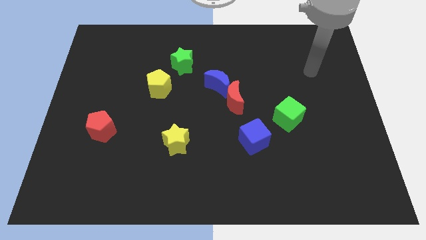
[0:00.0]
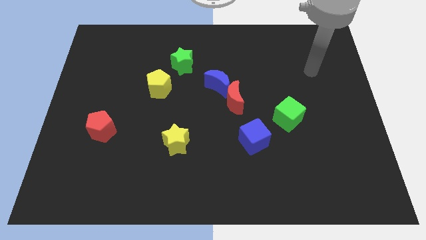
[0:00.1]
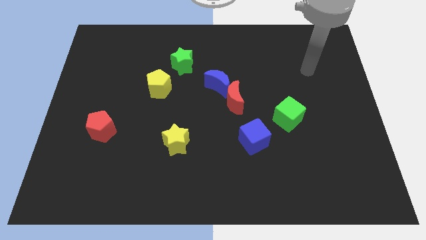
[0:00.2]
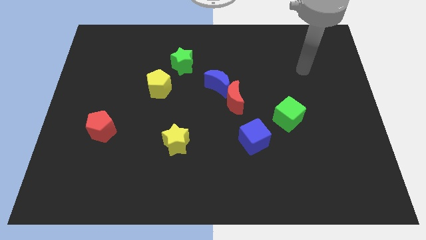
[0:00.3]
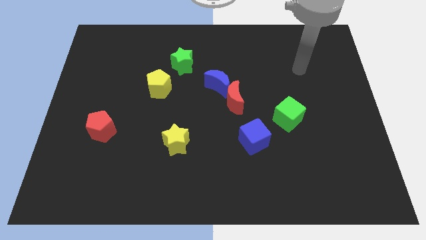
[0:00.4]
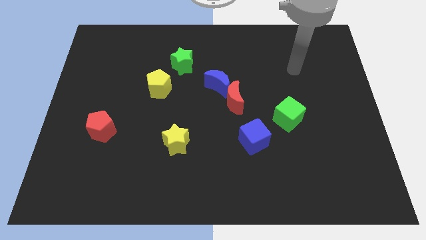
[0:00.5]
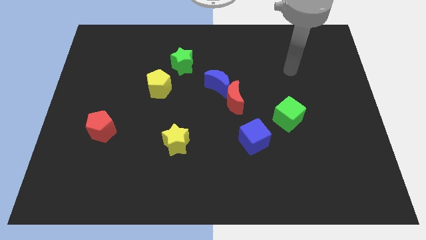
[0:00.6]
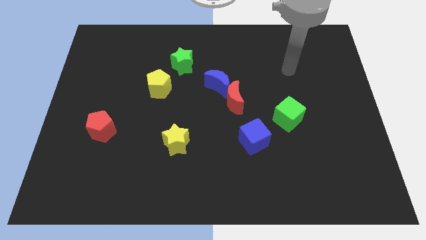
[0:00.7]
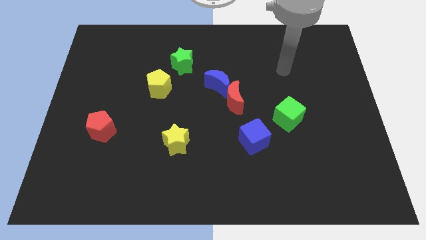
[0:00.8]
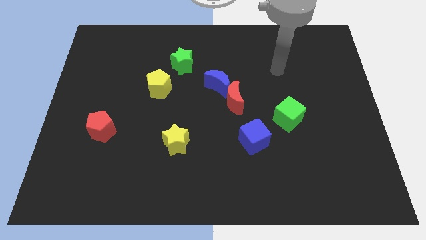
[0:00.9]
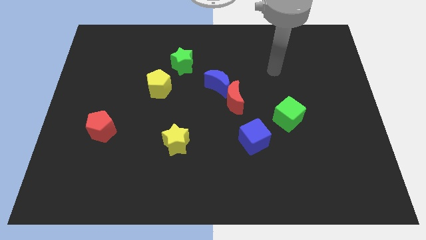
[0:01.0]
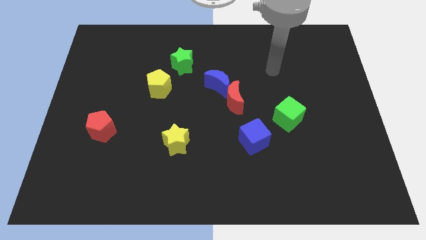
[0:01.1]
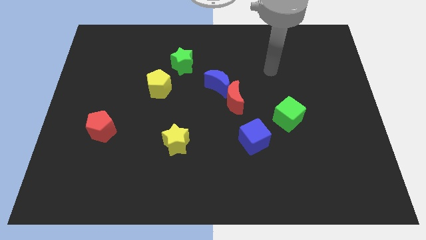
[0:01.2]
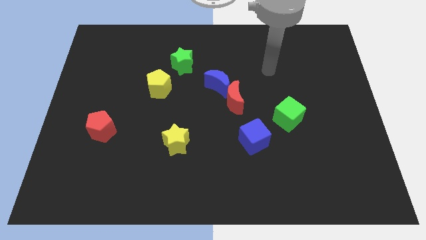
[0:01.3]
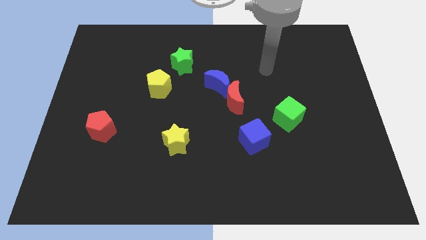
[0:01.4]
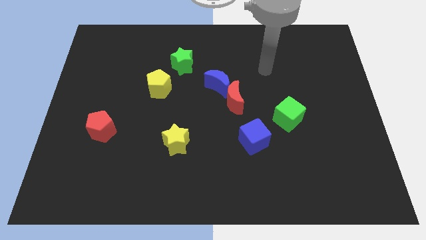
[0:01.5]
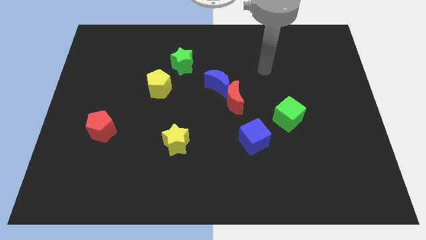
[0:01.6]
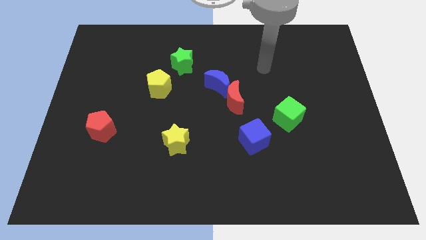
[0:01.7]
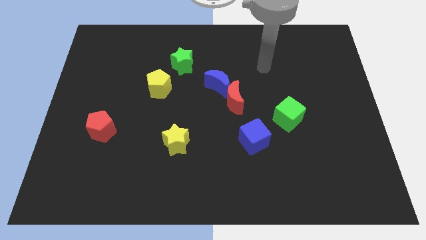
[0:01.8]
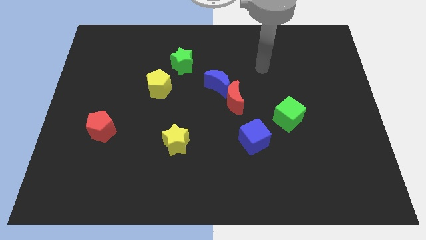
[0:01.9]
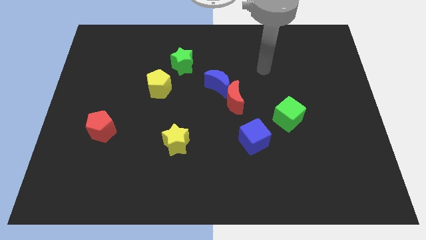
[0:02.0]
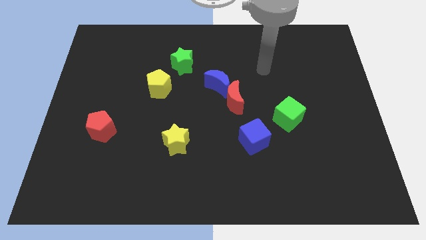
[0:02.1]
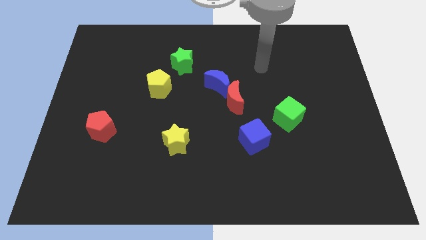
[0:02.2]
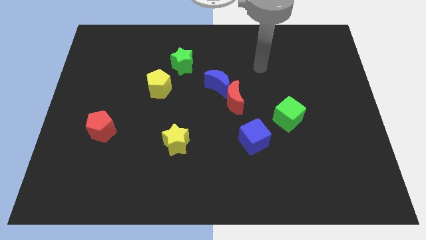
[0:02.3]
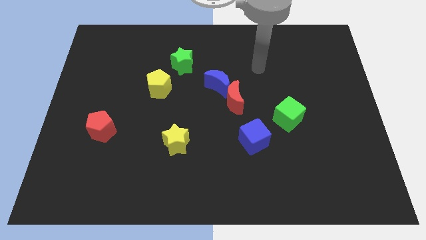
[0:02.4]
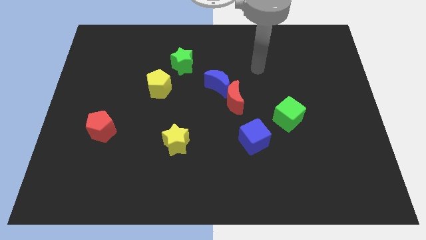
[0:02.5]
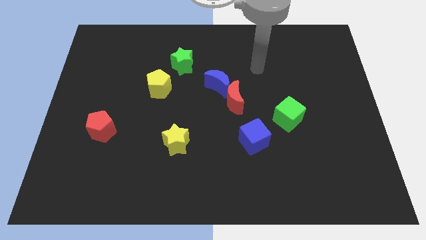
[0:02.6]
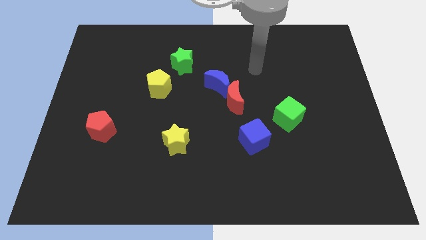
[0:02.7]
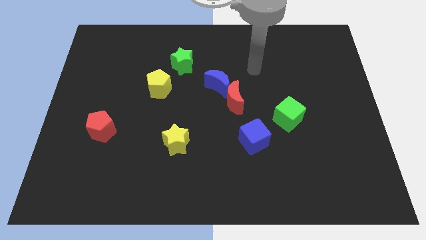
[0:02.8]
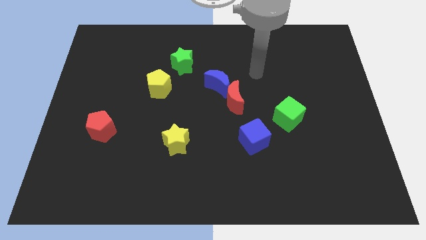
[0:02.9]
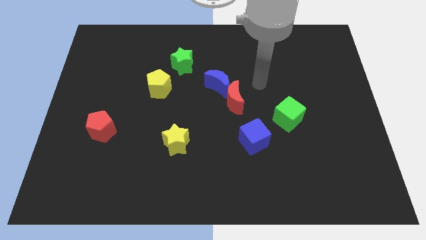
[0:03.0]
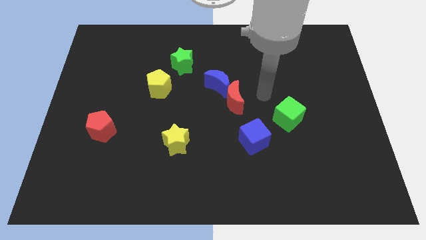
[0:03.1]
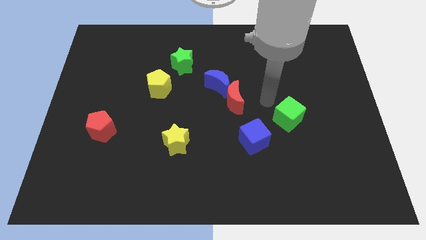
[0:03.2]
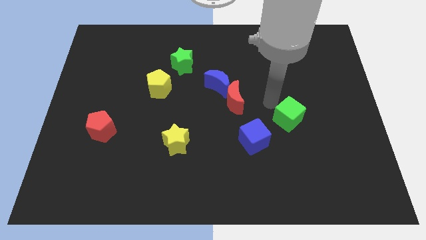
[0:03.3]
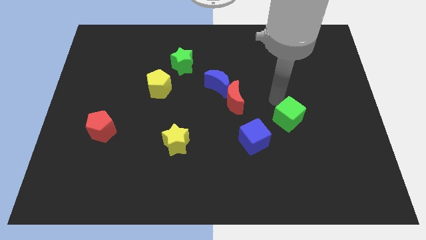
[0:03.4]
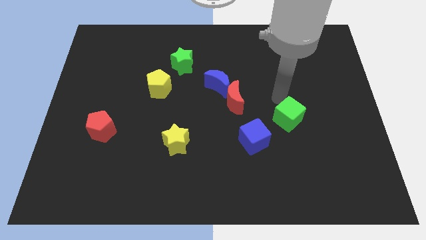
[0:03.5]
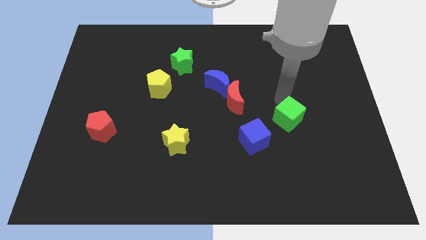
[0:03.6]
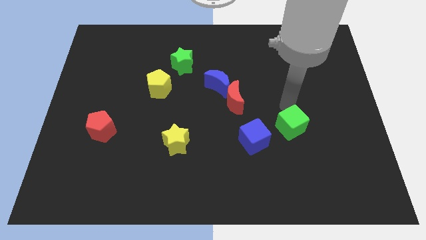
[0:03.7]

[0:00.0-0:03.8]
point your arm at the top of the green cube

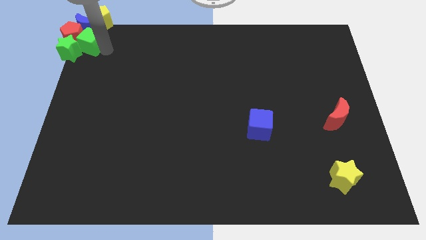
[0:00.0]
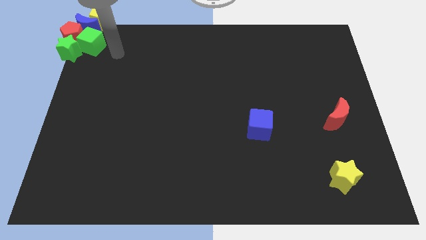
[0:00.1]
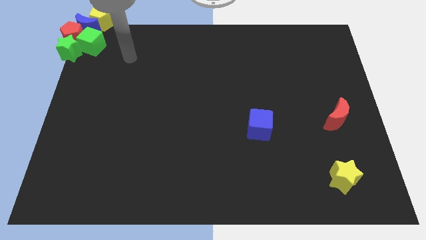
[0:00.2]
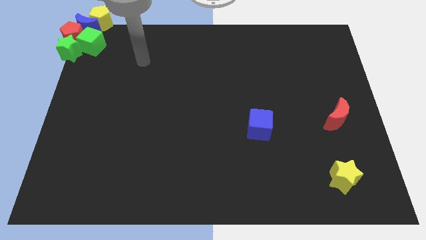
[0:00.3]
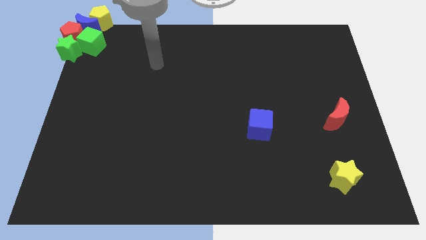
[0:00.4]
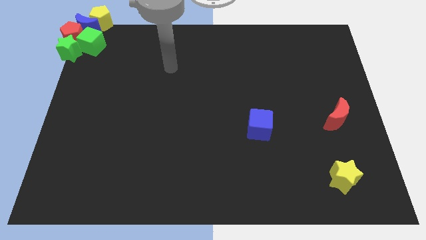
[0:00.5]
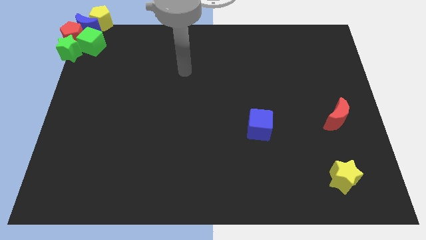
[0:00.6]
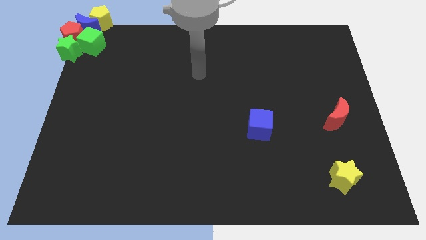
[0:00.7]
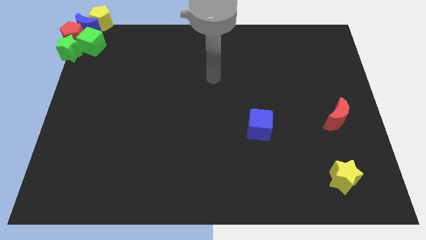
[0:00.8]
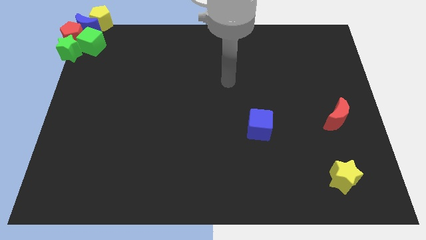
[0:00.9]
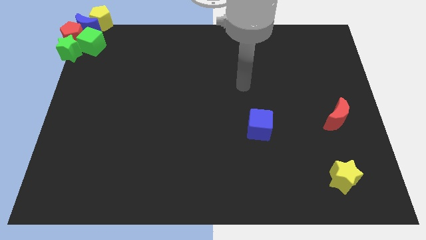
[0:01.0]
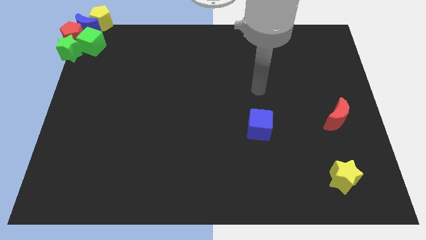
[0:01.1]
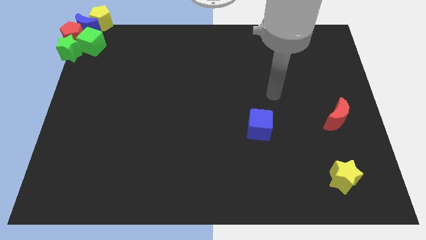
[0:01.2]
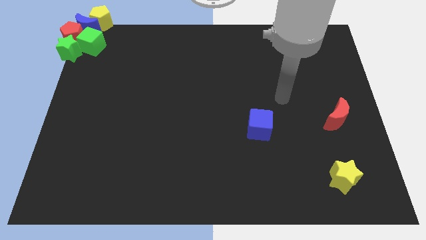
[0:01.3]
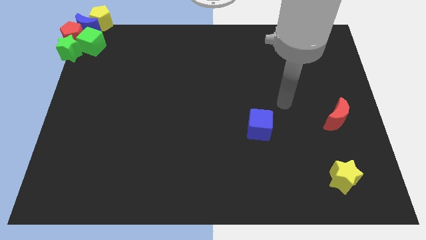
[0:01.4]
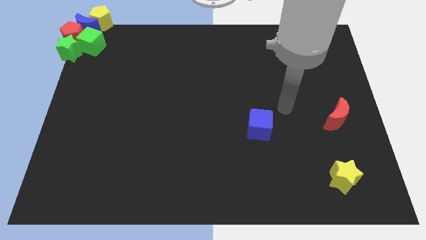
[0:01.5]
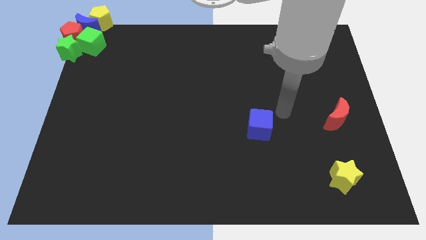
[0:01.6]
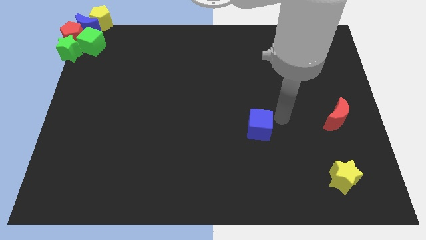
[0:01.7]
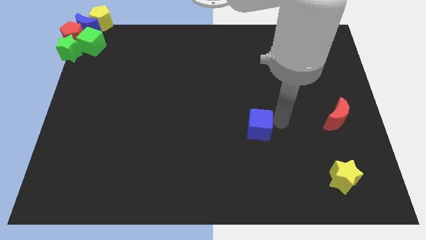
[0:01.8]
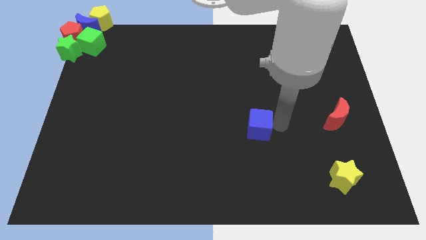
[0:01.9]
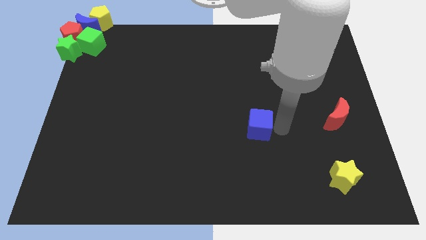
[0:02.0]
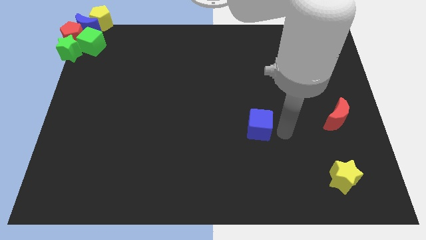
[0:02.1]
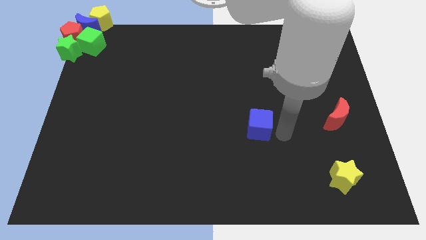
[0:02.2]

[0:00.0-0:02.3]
place your hand at right side of the blue square

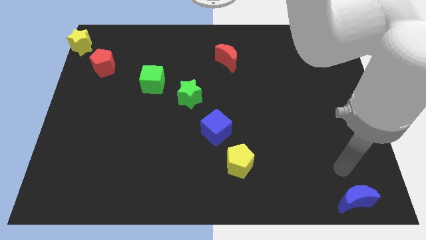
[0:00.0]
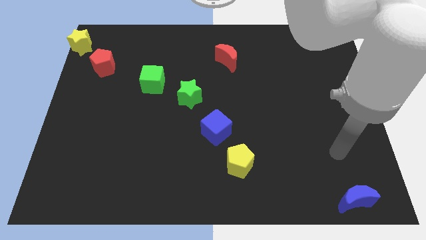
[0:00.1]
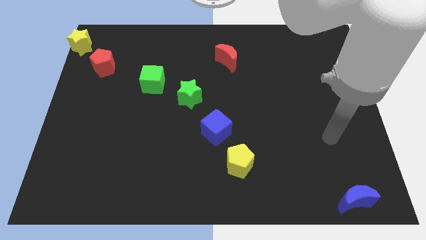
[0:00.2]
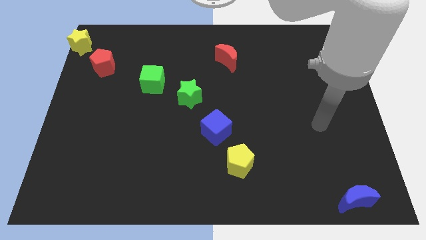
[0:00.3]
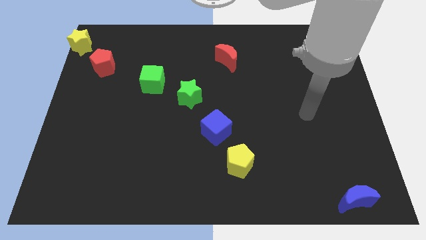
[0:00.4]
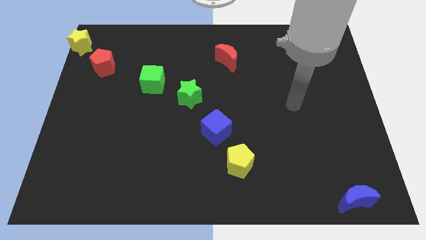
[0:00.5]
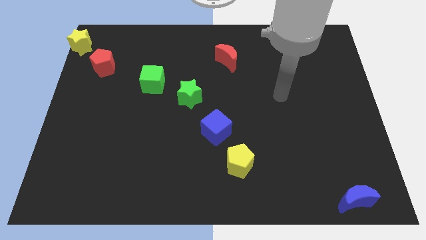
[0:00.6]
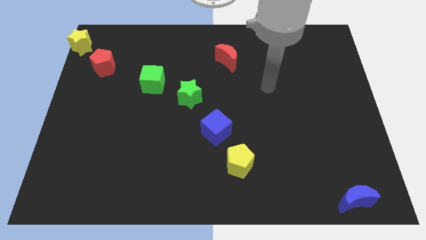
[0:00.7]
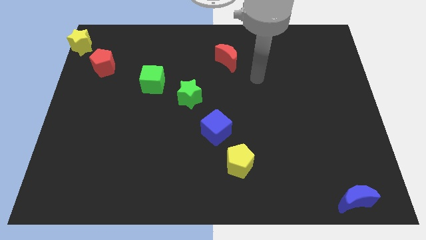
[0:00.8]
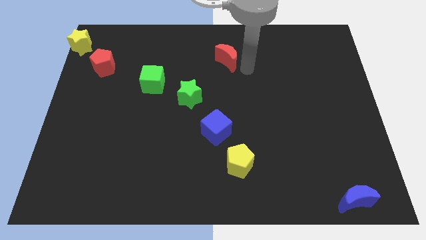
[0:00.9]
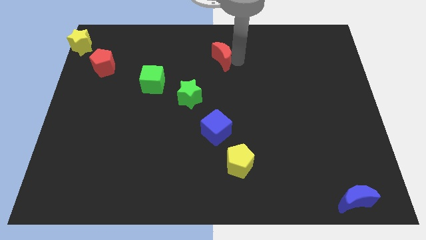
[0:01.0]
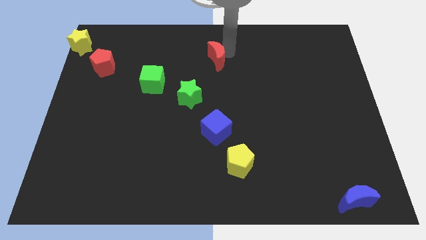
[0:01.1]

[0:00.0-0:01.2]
touch the right side of the red crescent

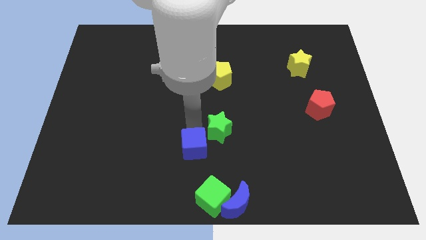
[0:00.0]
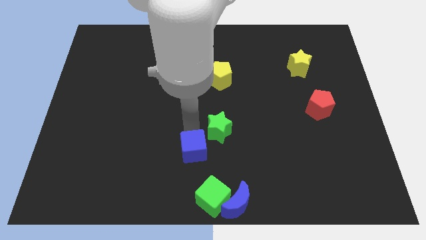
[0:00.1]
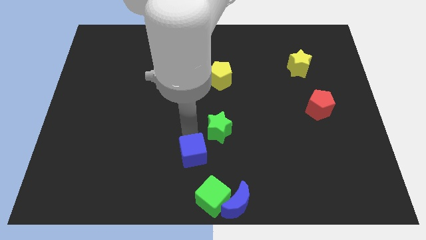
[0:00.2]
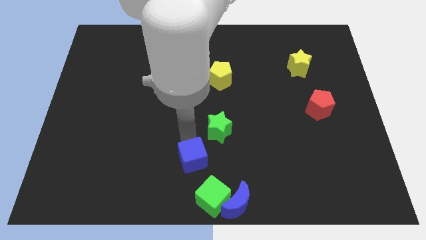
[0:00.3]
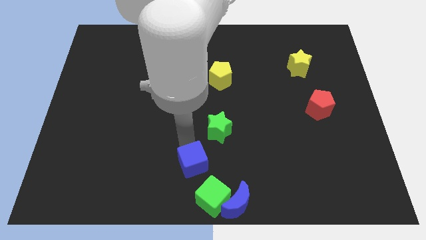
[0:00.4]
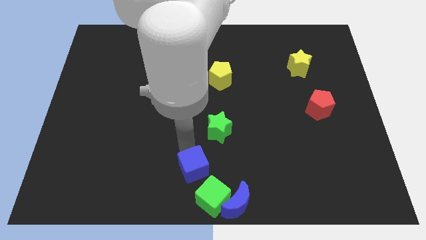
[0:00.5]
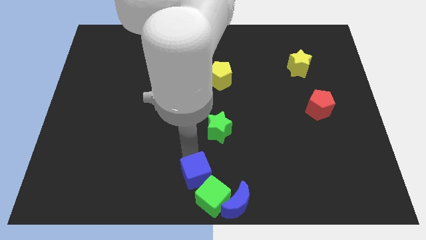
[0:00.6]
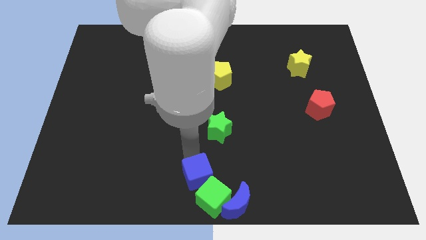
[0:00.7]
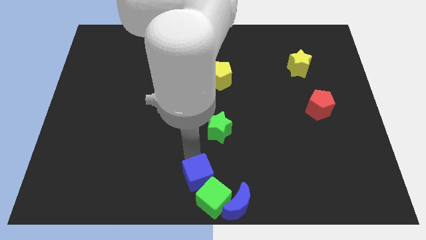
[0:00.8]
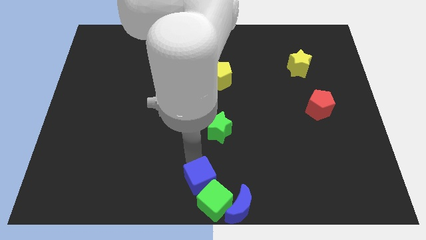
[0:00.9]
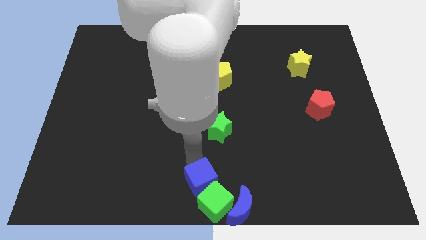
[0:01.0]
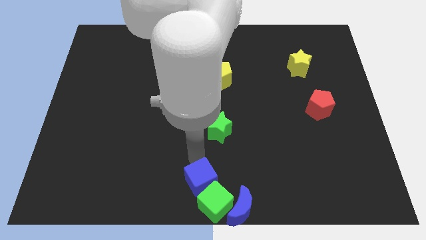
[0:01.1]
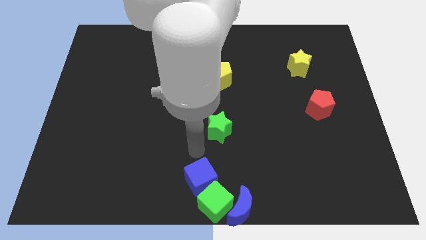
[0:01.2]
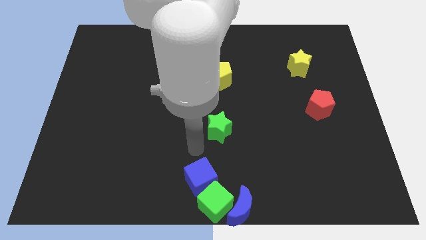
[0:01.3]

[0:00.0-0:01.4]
push the blue cube into the green cube

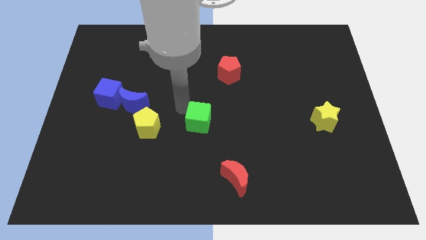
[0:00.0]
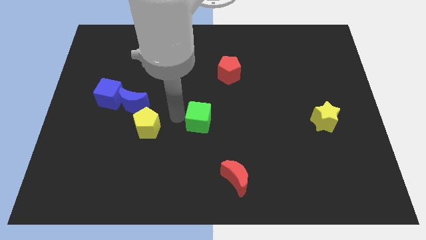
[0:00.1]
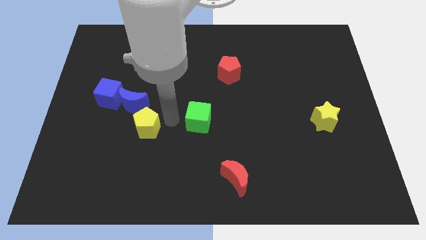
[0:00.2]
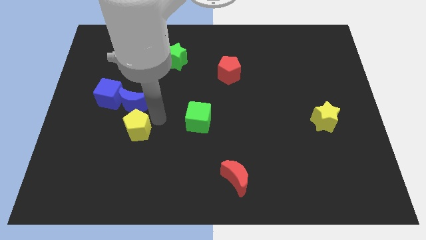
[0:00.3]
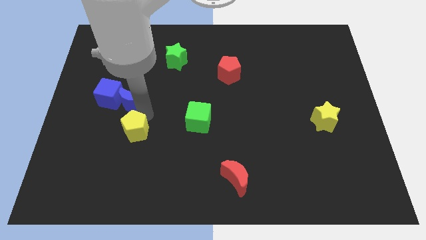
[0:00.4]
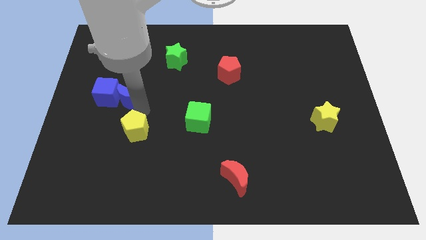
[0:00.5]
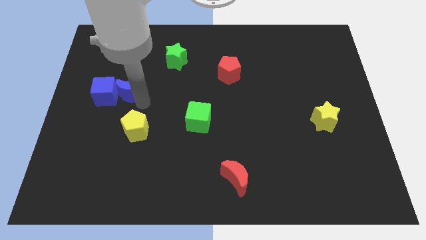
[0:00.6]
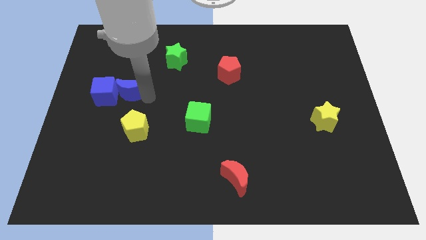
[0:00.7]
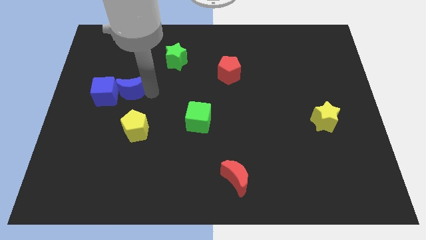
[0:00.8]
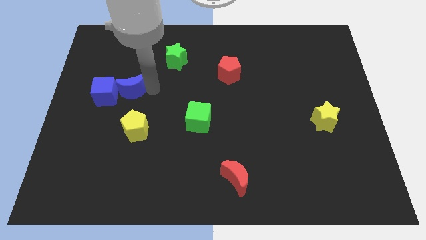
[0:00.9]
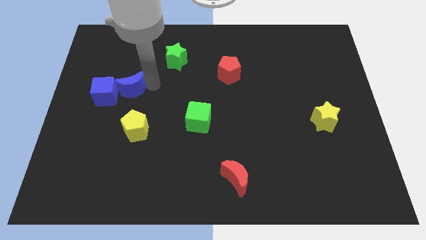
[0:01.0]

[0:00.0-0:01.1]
separate blue crescent from yellow pentagon
